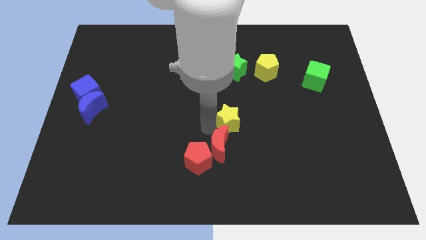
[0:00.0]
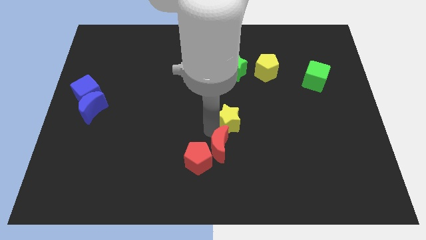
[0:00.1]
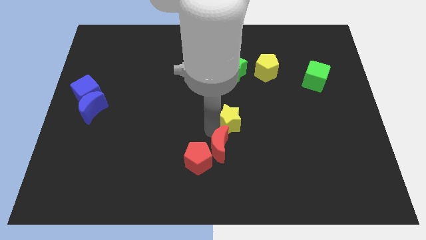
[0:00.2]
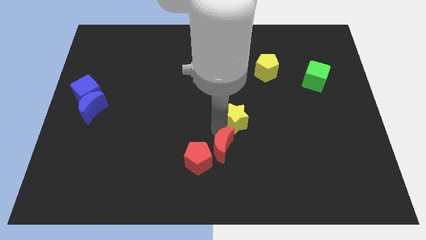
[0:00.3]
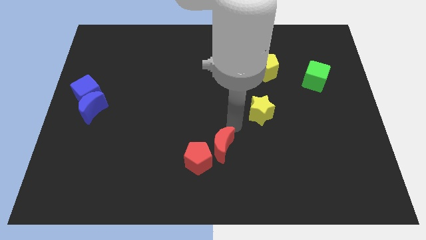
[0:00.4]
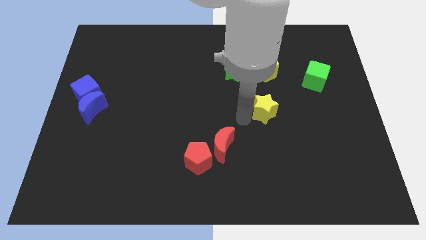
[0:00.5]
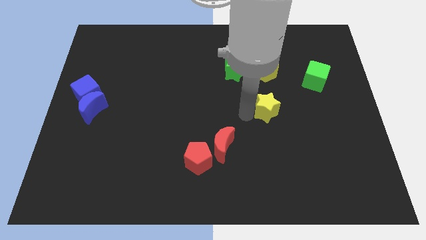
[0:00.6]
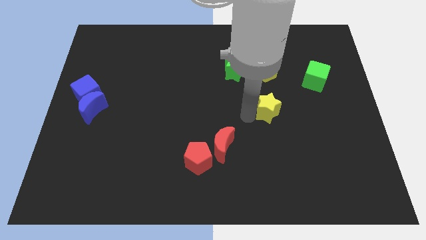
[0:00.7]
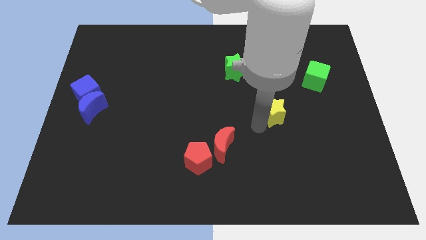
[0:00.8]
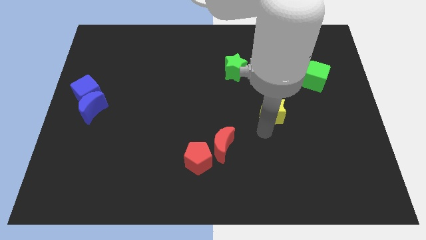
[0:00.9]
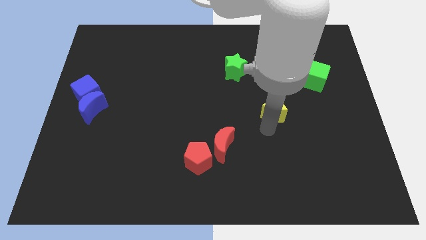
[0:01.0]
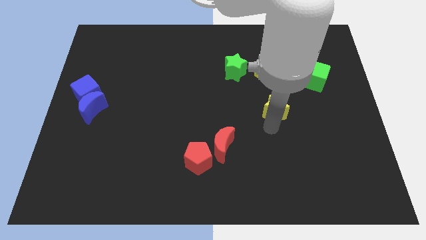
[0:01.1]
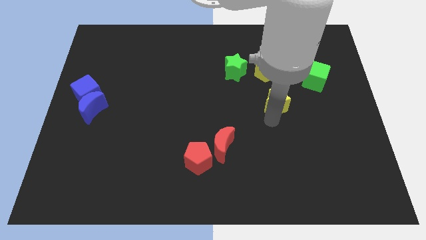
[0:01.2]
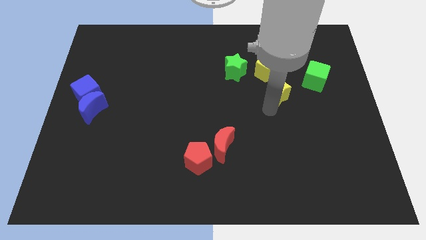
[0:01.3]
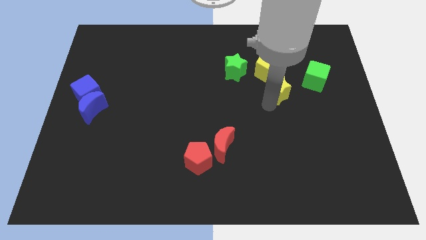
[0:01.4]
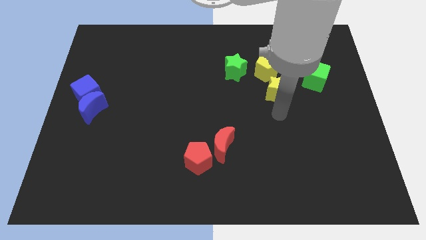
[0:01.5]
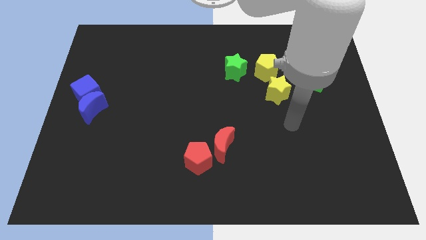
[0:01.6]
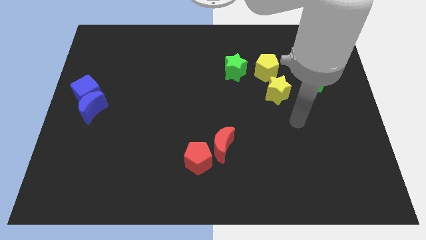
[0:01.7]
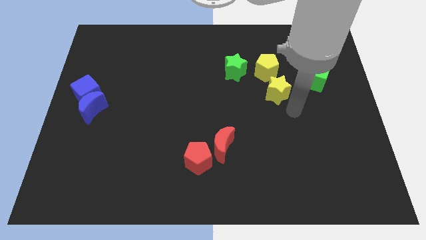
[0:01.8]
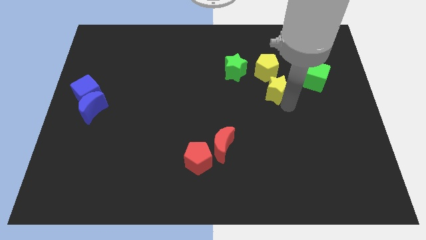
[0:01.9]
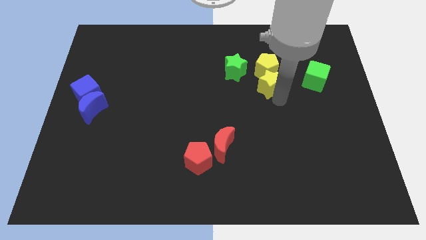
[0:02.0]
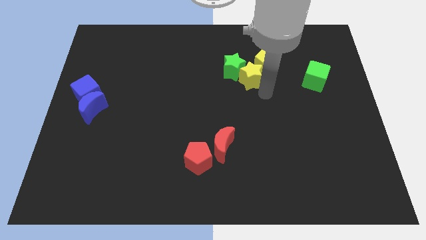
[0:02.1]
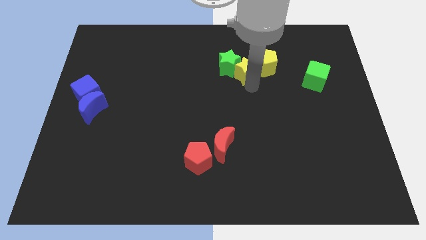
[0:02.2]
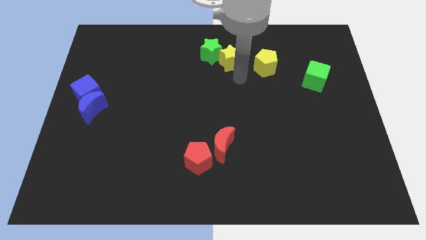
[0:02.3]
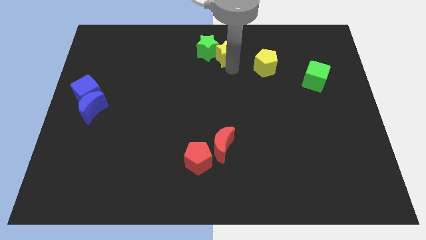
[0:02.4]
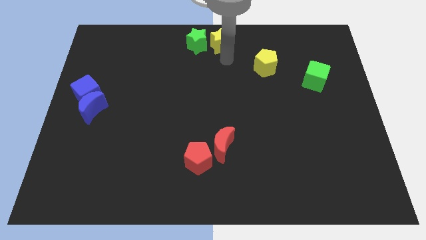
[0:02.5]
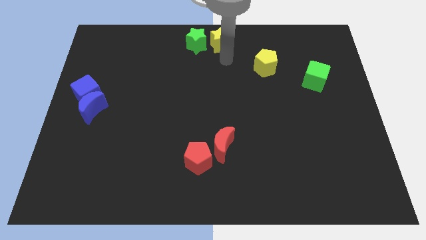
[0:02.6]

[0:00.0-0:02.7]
move the yellow star and green star to top center of the board

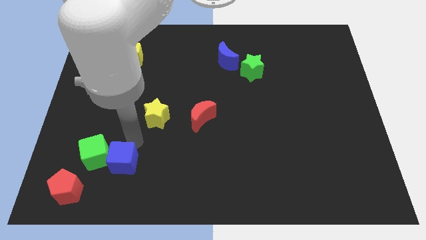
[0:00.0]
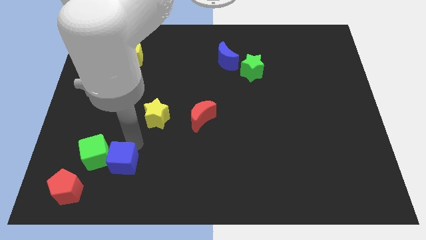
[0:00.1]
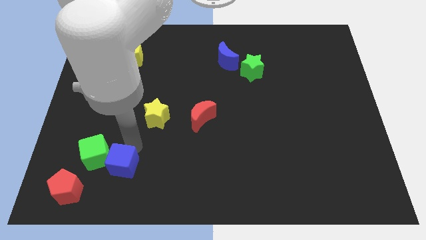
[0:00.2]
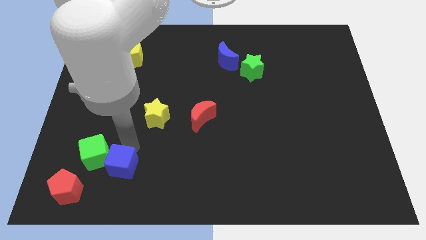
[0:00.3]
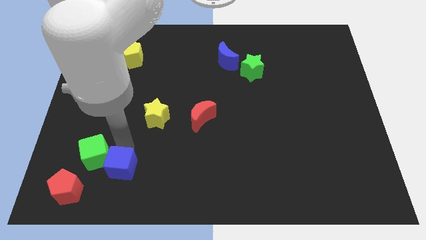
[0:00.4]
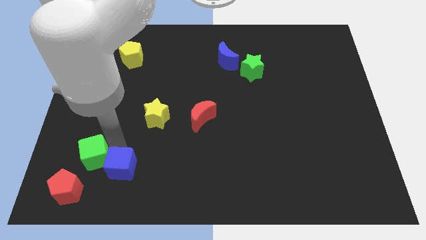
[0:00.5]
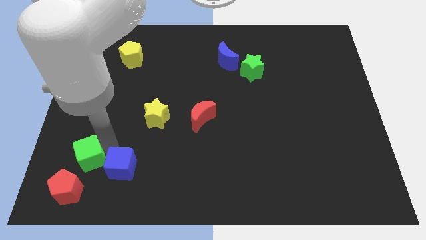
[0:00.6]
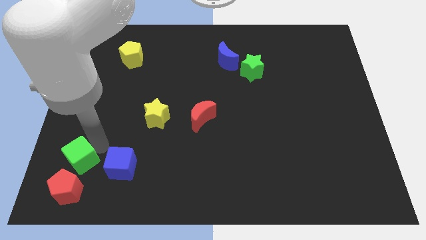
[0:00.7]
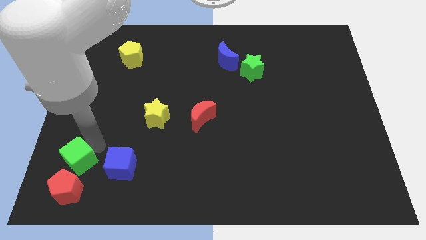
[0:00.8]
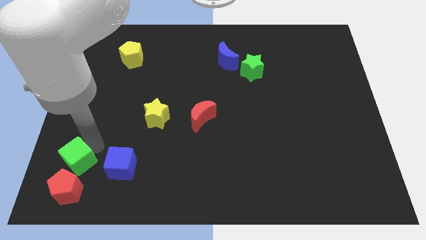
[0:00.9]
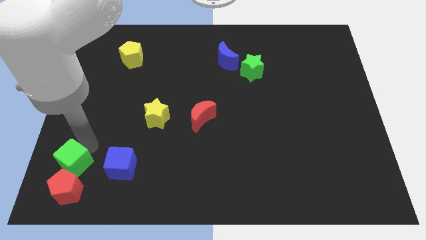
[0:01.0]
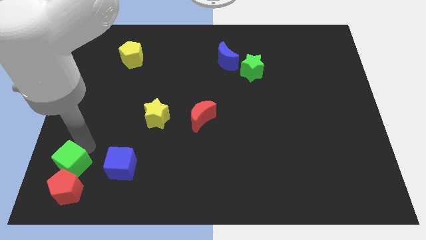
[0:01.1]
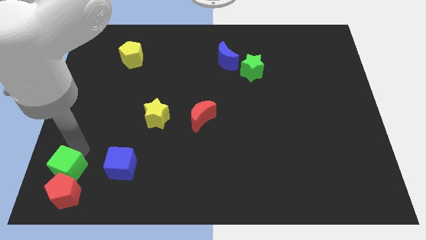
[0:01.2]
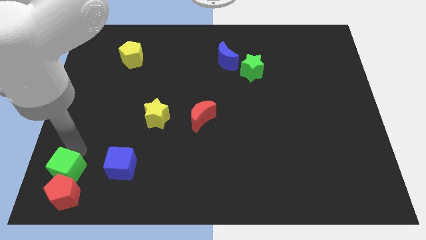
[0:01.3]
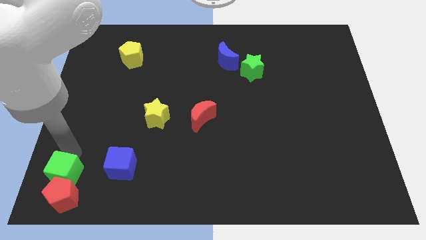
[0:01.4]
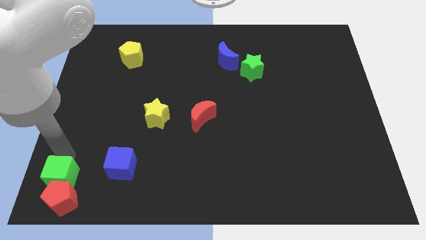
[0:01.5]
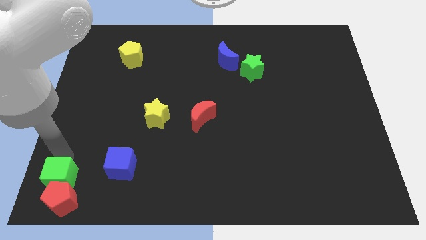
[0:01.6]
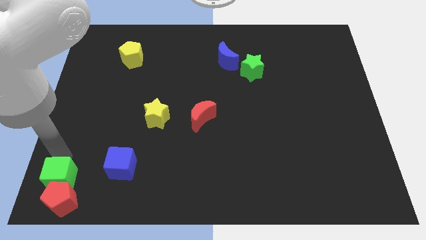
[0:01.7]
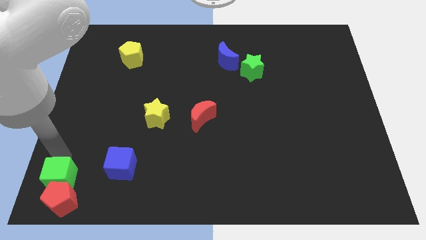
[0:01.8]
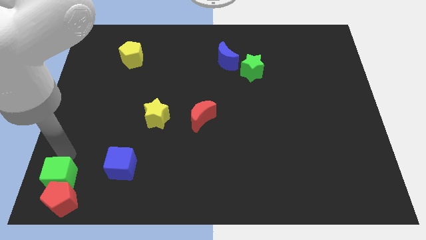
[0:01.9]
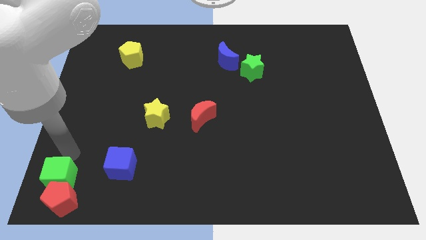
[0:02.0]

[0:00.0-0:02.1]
push green cube into the red pentagon

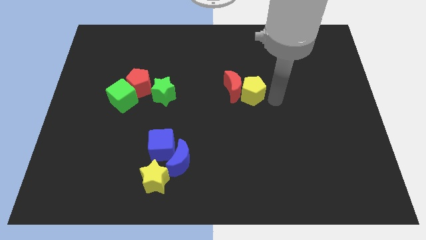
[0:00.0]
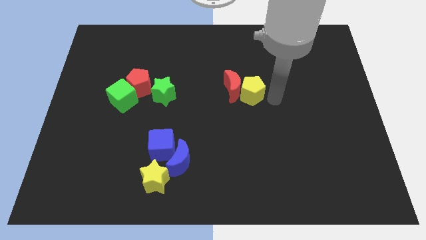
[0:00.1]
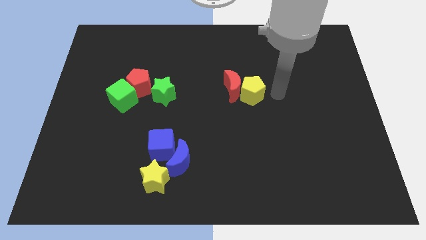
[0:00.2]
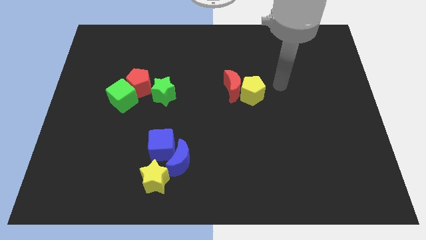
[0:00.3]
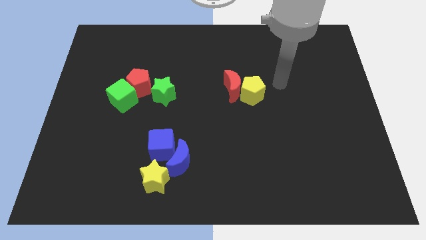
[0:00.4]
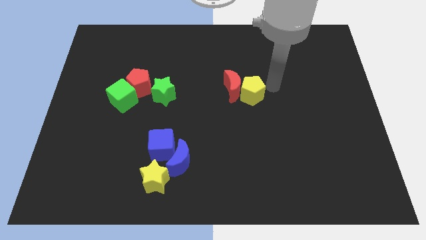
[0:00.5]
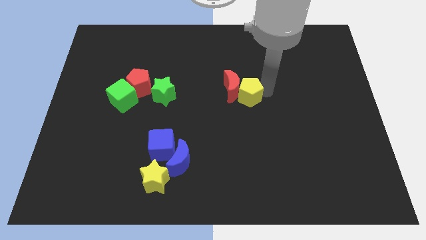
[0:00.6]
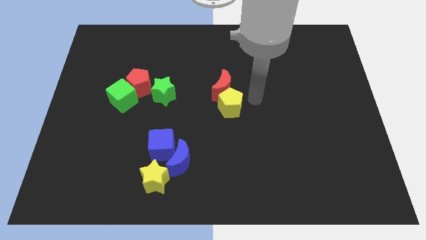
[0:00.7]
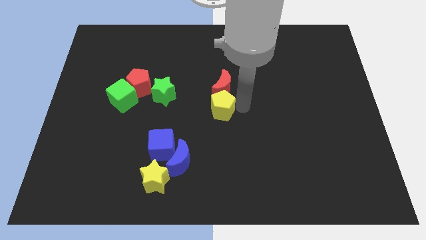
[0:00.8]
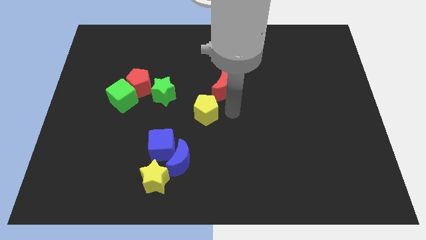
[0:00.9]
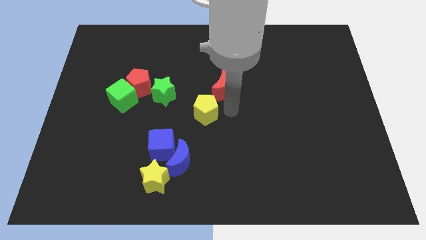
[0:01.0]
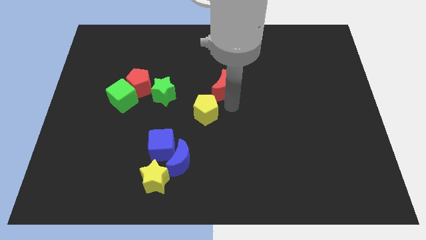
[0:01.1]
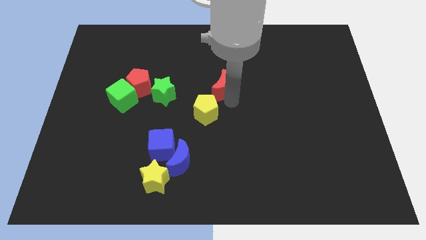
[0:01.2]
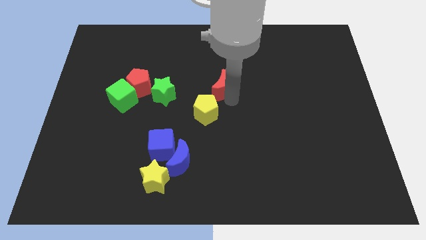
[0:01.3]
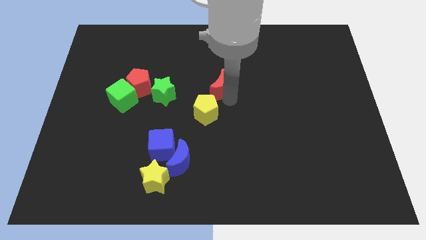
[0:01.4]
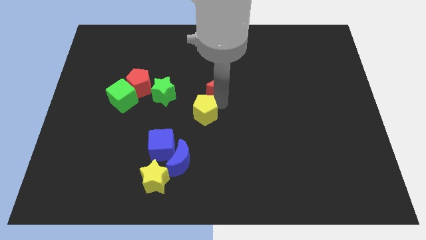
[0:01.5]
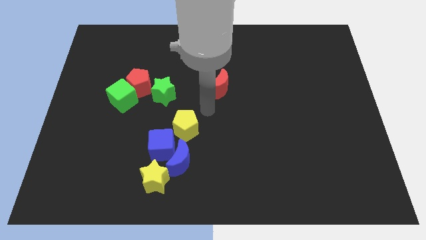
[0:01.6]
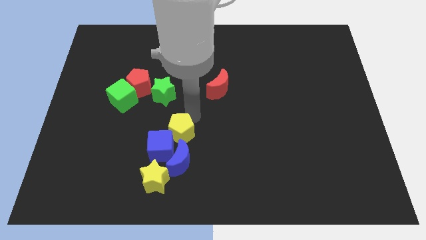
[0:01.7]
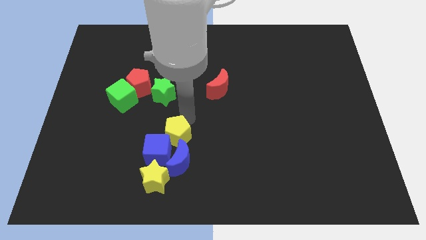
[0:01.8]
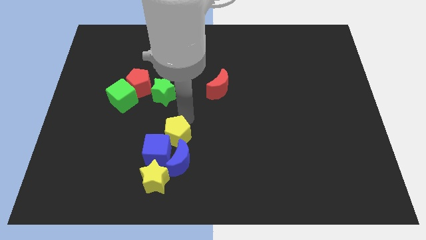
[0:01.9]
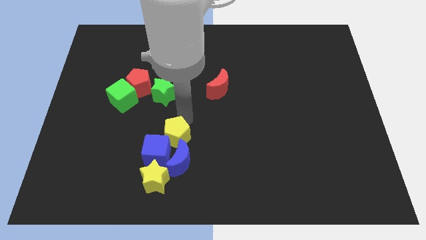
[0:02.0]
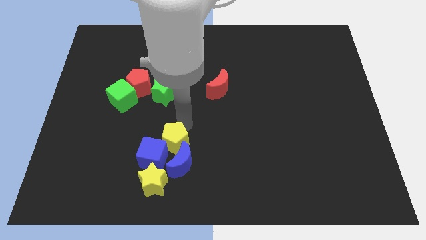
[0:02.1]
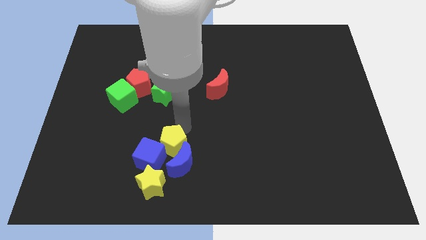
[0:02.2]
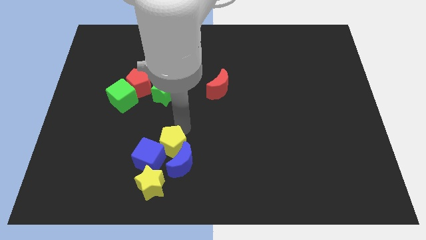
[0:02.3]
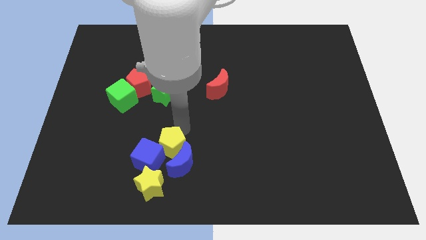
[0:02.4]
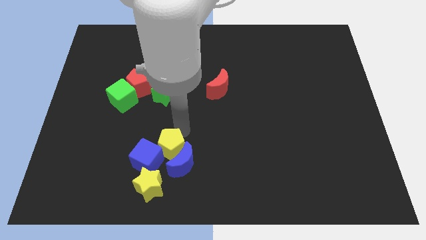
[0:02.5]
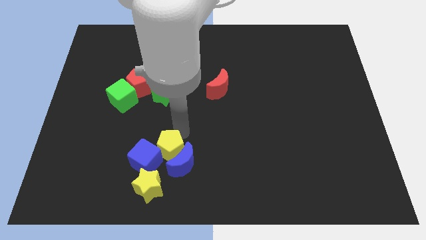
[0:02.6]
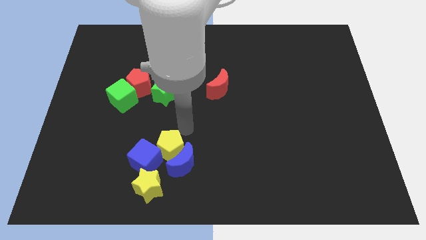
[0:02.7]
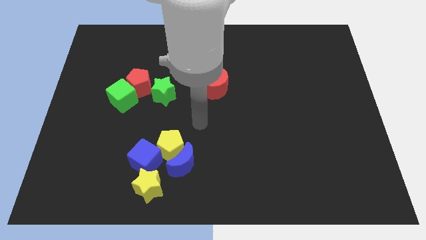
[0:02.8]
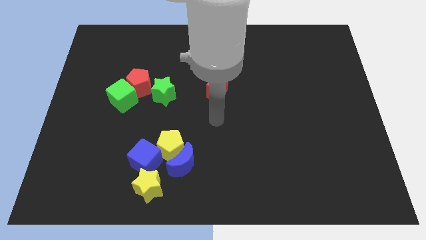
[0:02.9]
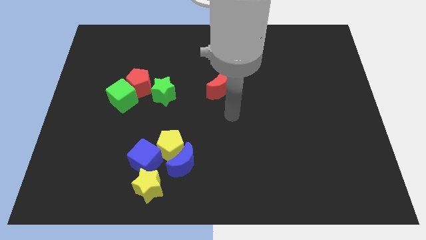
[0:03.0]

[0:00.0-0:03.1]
push the yellow pentagon into the blue blocks

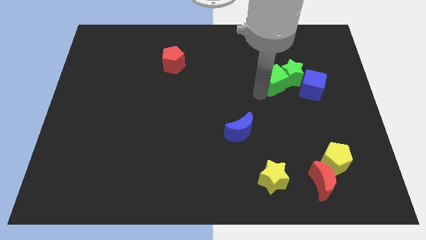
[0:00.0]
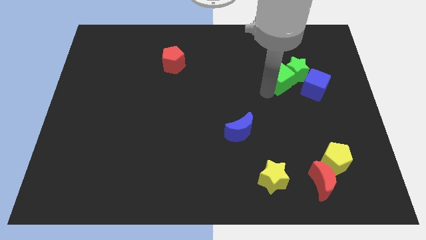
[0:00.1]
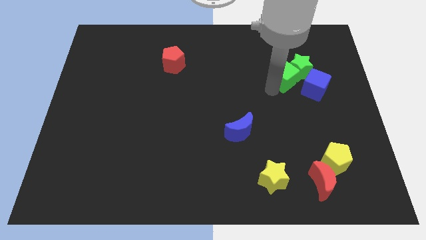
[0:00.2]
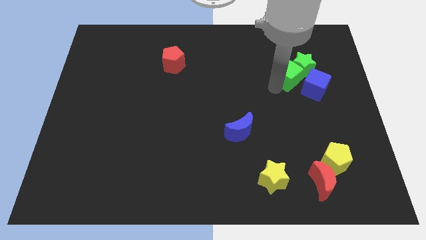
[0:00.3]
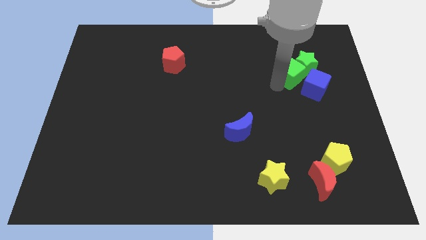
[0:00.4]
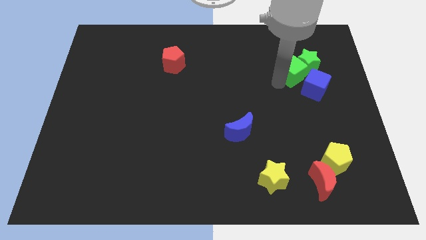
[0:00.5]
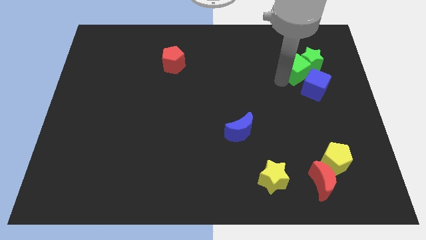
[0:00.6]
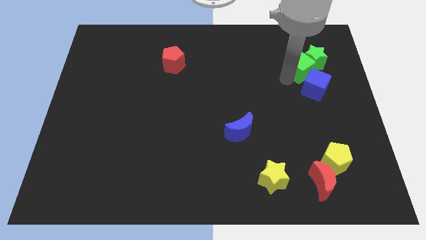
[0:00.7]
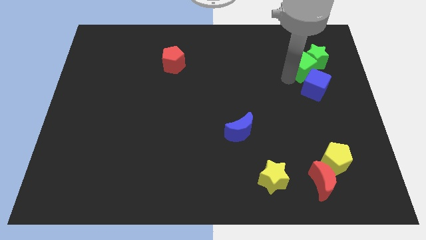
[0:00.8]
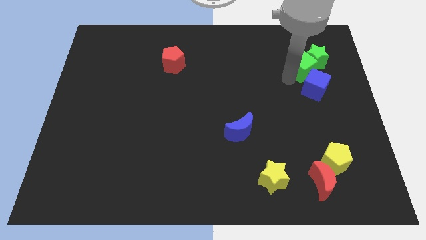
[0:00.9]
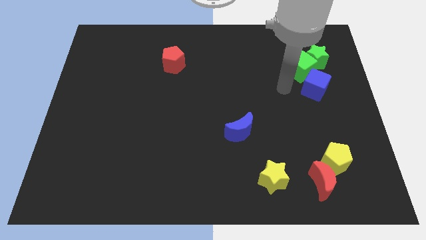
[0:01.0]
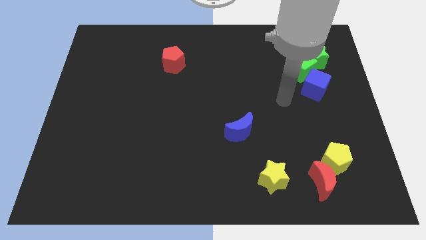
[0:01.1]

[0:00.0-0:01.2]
put the green blocks above the blue cube
